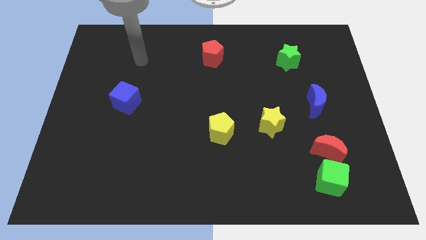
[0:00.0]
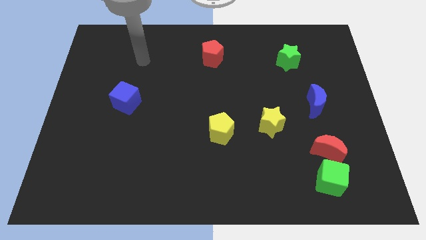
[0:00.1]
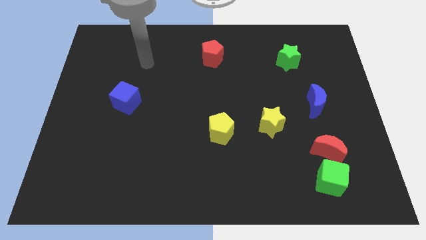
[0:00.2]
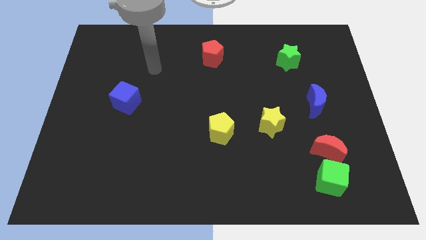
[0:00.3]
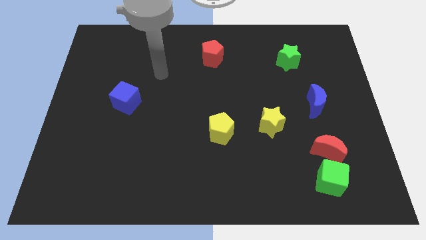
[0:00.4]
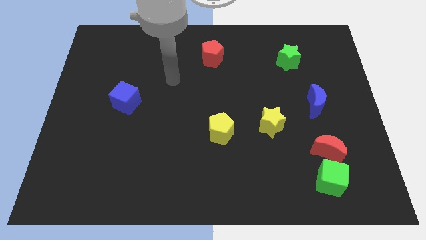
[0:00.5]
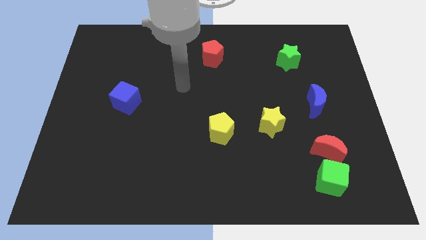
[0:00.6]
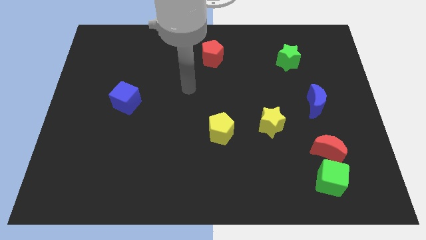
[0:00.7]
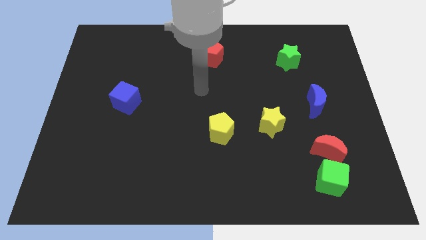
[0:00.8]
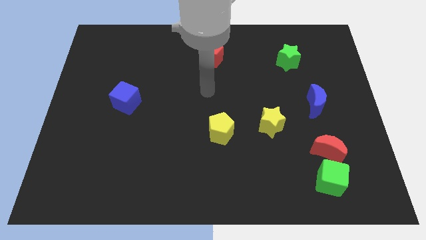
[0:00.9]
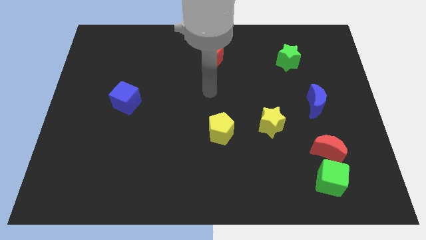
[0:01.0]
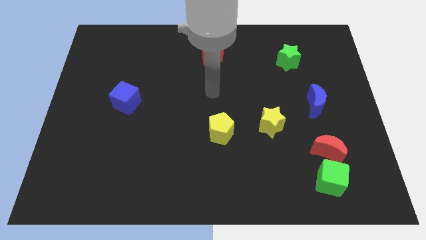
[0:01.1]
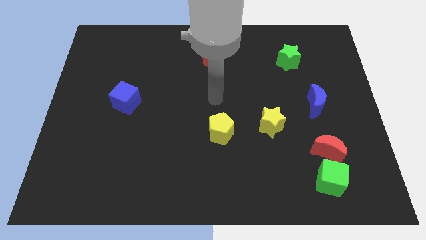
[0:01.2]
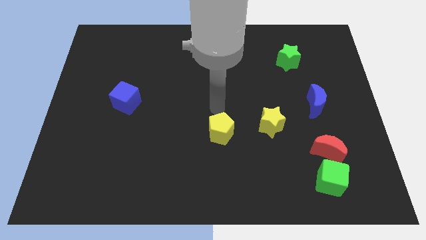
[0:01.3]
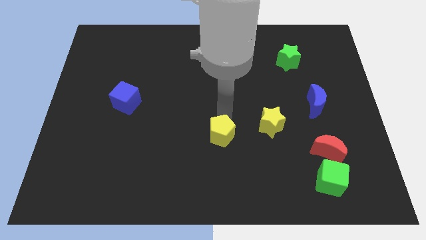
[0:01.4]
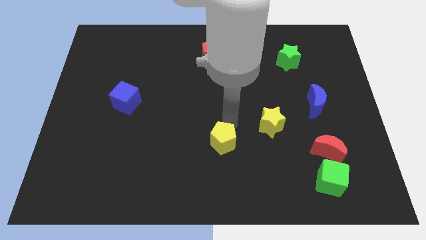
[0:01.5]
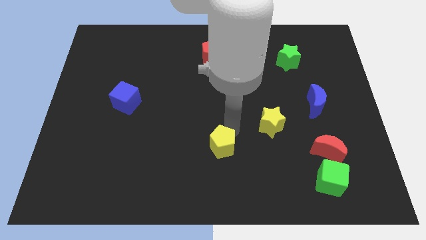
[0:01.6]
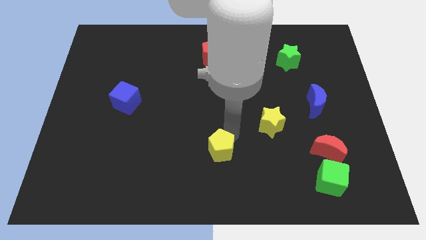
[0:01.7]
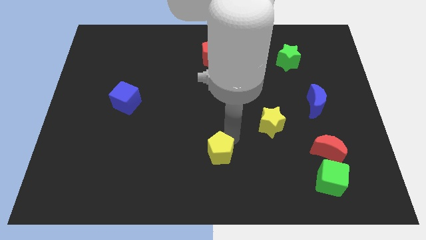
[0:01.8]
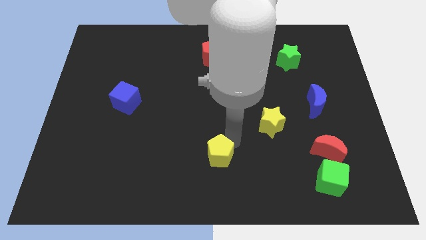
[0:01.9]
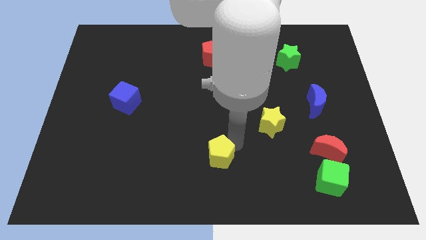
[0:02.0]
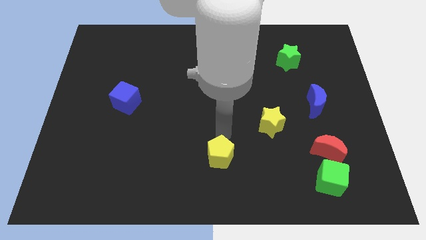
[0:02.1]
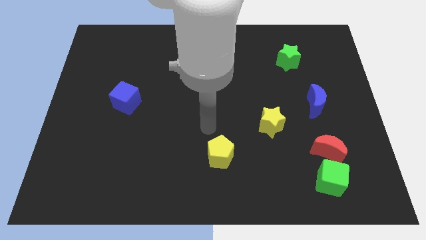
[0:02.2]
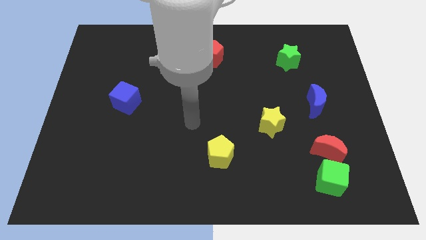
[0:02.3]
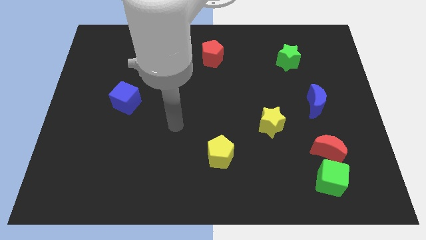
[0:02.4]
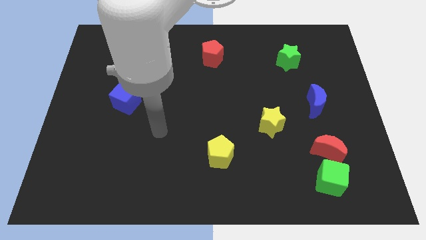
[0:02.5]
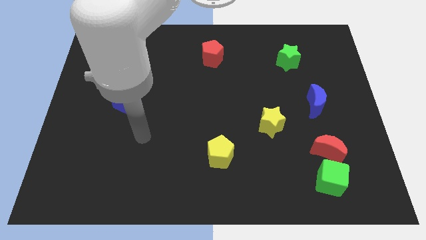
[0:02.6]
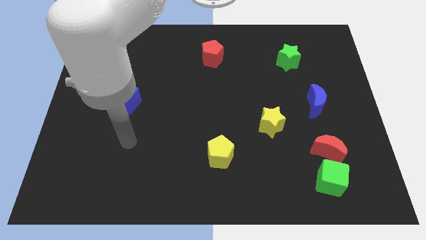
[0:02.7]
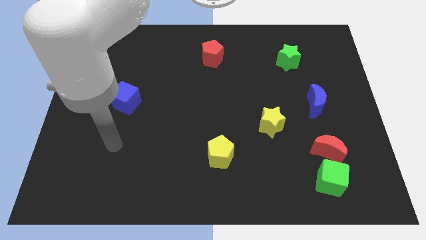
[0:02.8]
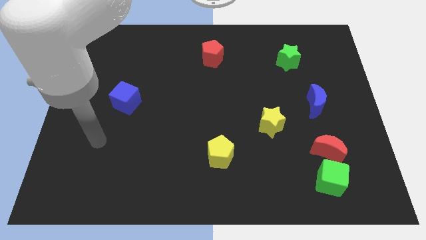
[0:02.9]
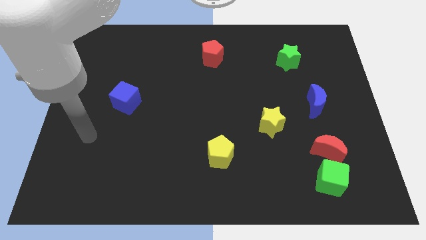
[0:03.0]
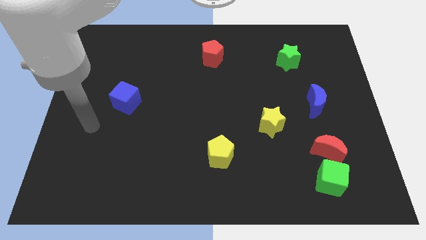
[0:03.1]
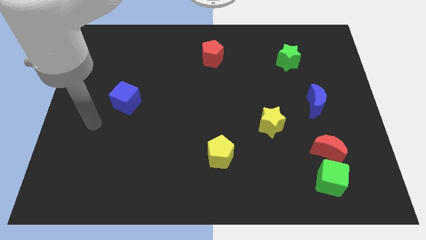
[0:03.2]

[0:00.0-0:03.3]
push the yellow pentagon to the bottom left of the yellow star

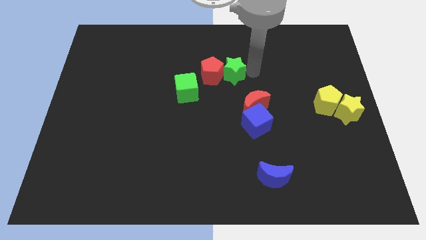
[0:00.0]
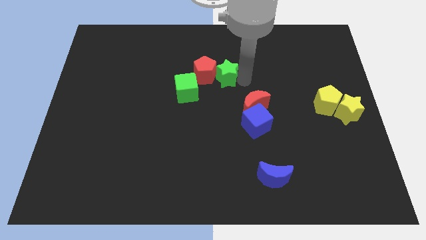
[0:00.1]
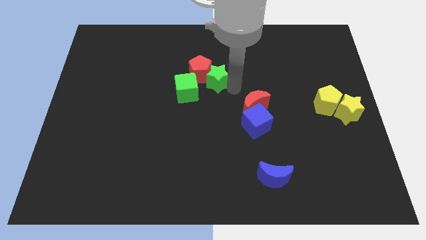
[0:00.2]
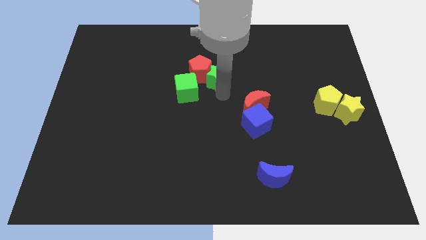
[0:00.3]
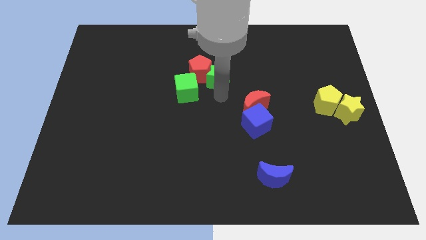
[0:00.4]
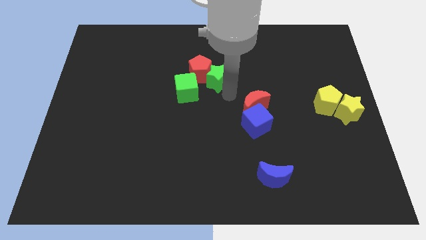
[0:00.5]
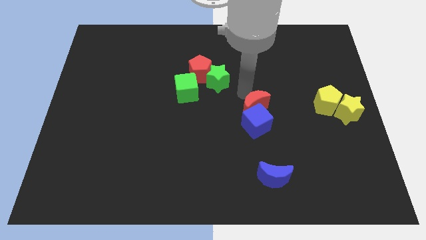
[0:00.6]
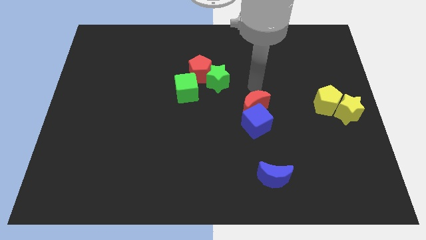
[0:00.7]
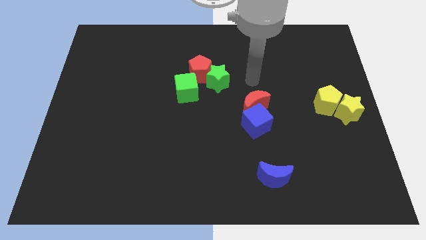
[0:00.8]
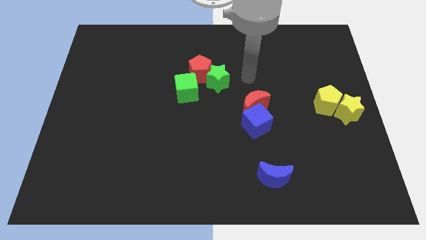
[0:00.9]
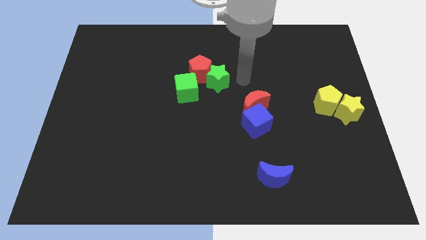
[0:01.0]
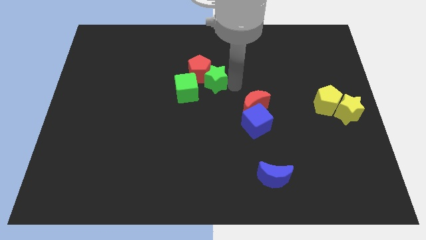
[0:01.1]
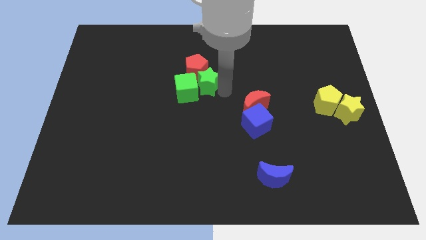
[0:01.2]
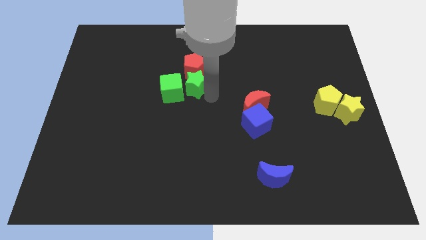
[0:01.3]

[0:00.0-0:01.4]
move the green star close to the green cube

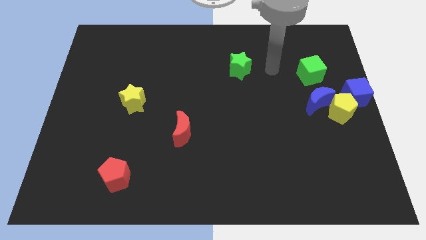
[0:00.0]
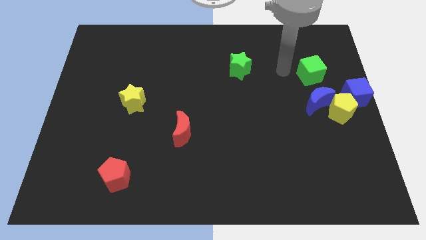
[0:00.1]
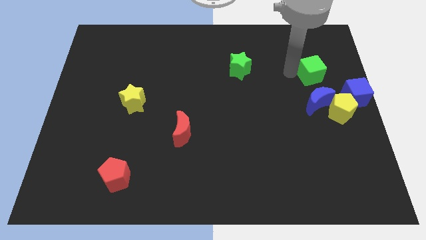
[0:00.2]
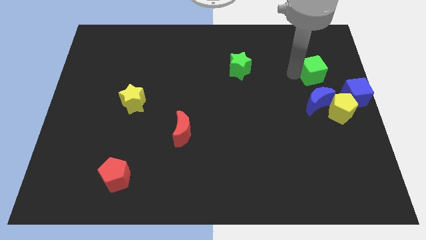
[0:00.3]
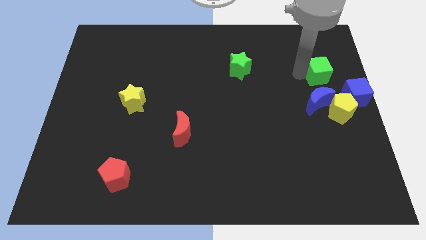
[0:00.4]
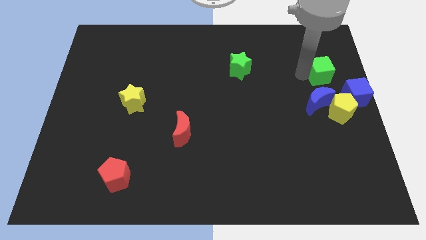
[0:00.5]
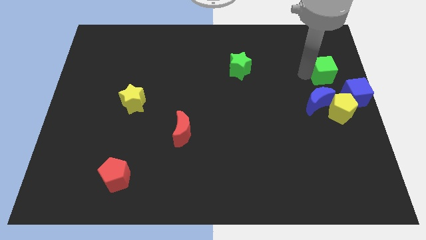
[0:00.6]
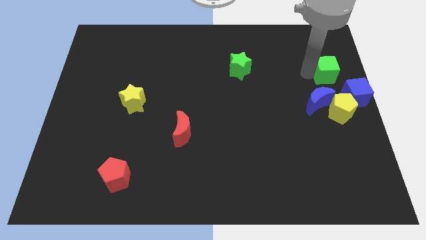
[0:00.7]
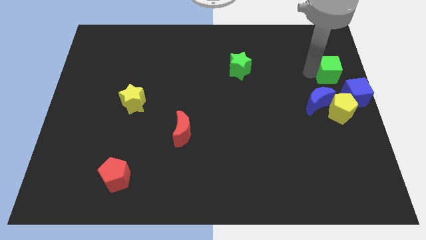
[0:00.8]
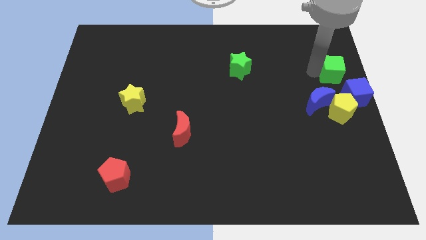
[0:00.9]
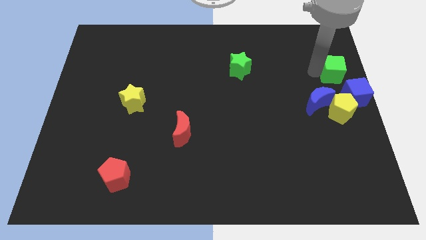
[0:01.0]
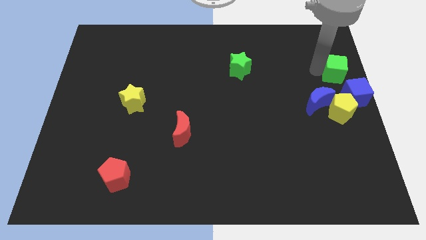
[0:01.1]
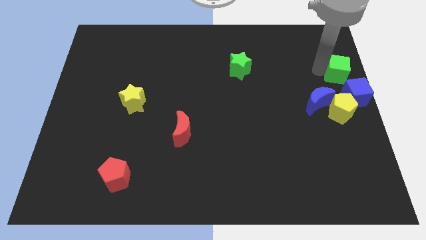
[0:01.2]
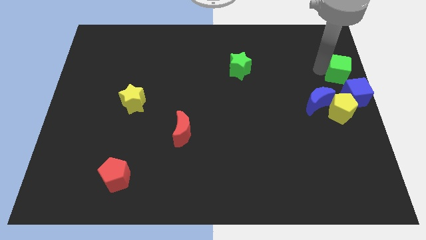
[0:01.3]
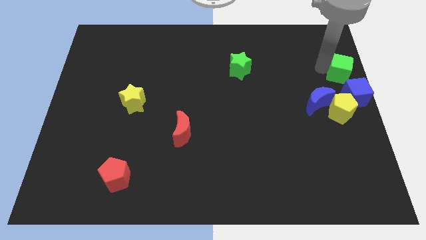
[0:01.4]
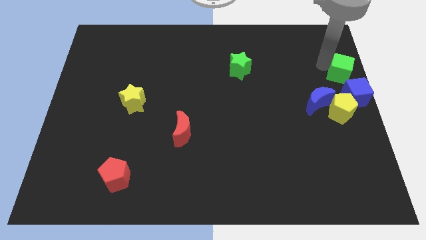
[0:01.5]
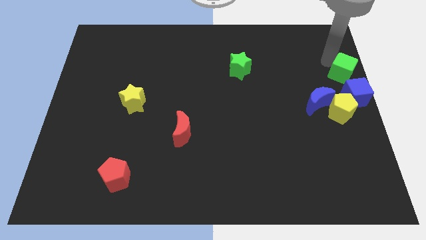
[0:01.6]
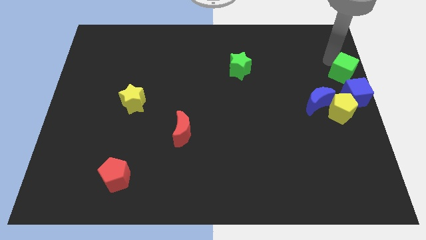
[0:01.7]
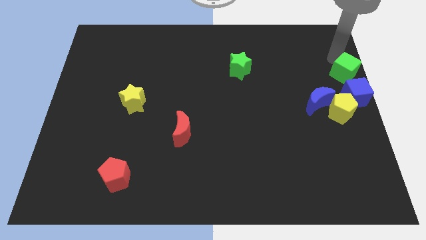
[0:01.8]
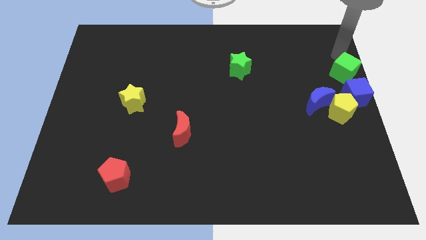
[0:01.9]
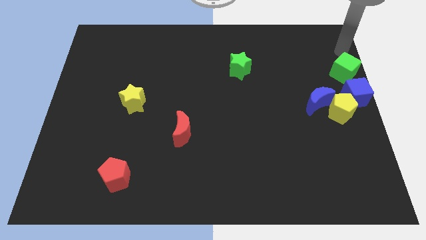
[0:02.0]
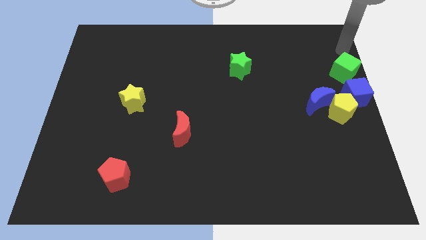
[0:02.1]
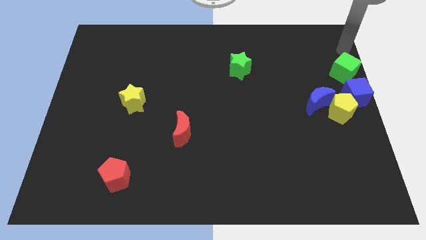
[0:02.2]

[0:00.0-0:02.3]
move the green cube to the top of the blue cube

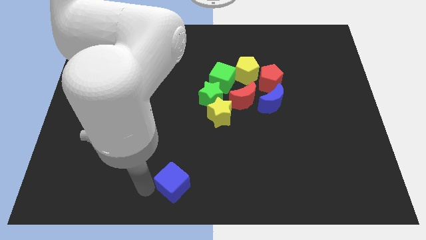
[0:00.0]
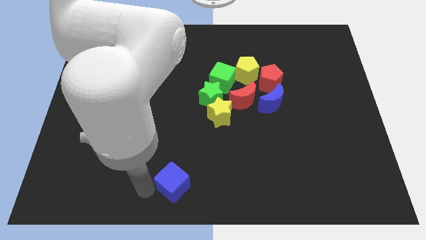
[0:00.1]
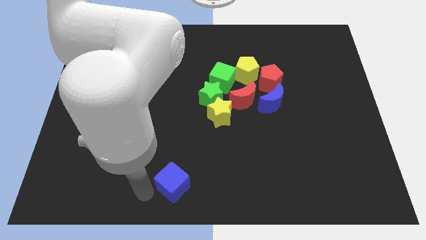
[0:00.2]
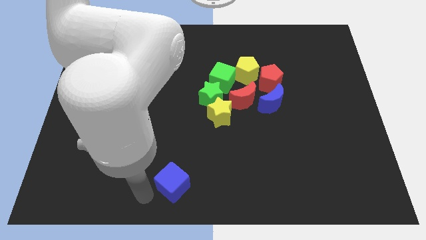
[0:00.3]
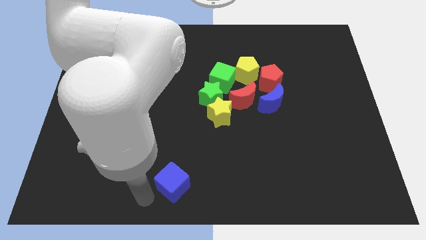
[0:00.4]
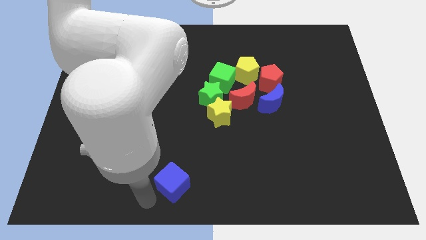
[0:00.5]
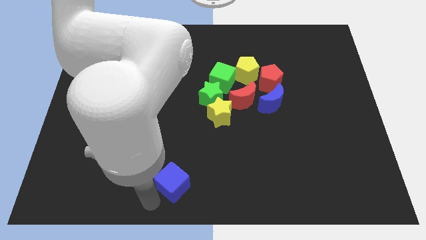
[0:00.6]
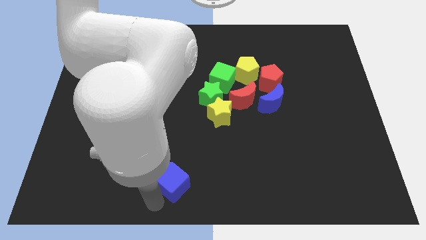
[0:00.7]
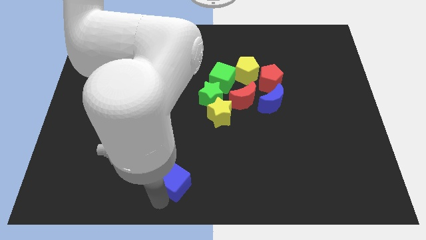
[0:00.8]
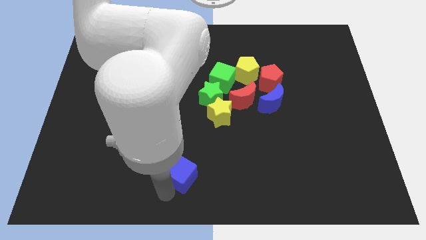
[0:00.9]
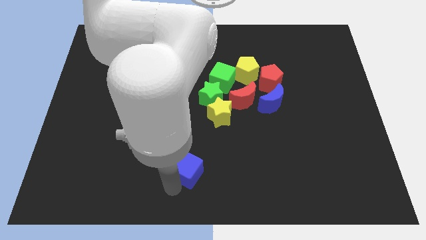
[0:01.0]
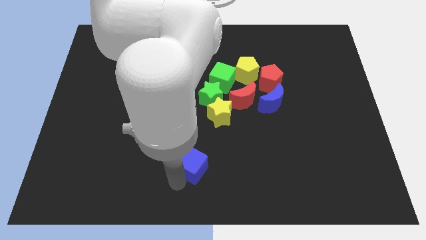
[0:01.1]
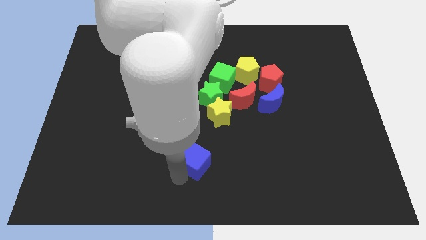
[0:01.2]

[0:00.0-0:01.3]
push the blue cube slightly to the top of the board

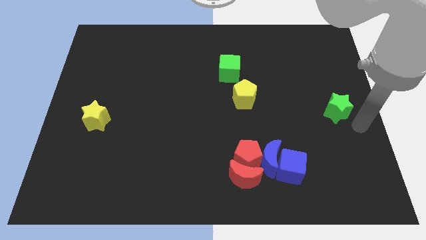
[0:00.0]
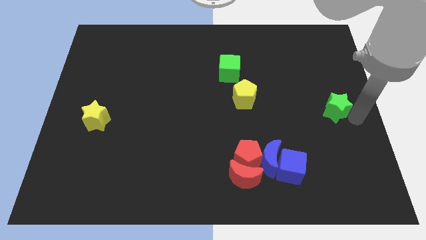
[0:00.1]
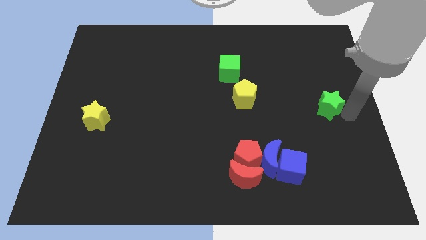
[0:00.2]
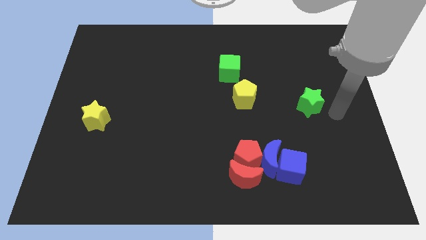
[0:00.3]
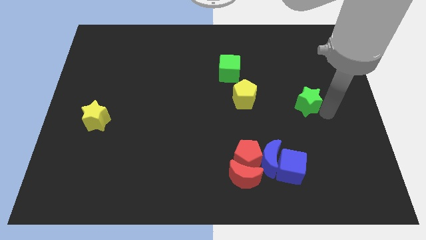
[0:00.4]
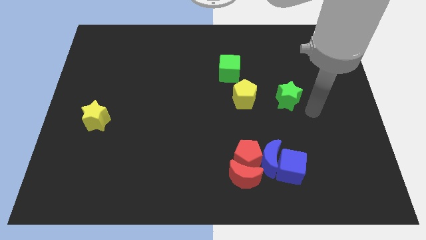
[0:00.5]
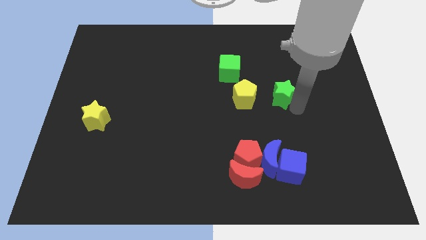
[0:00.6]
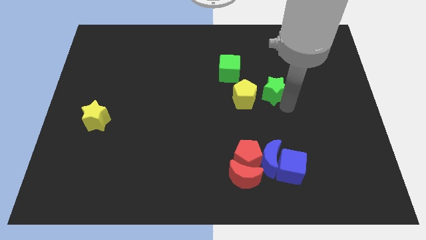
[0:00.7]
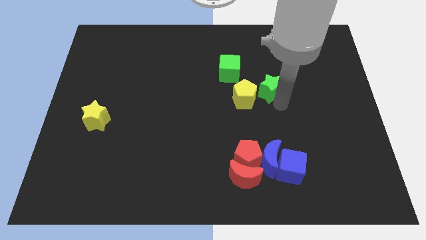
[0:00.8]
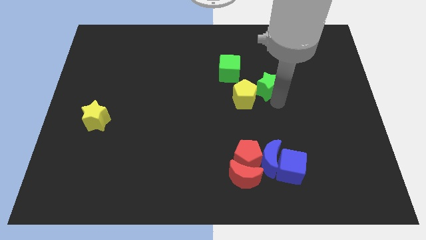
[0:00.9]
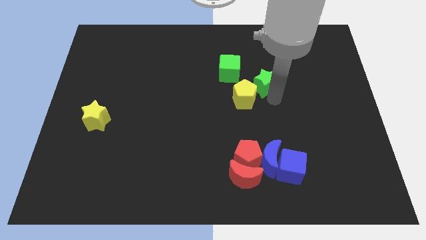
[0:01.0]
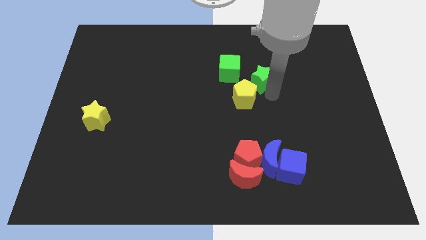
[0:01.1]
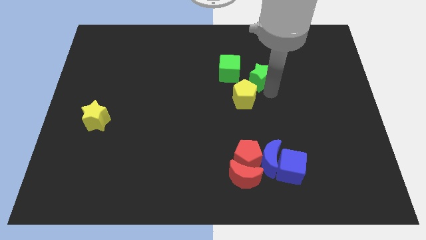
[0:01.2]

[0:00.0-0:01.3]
move the green star to the top right of the yellow pentagon
